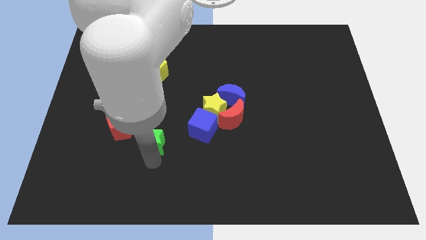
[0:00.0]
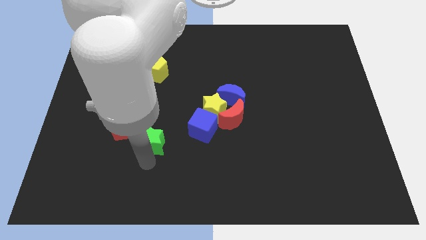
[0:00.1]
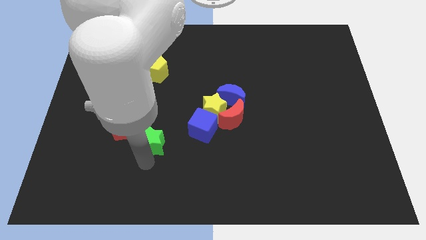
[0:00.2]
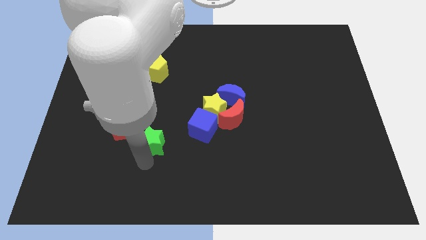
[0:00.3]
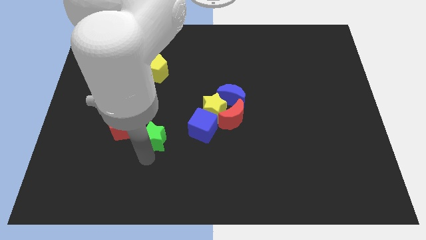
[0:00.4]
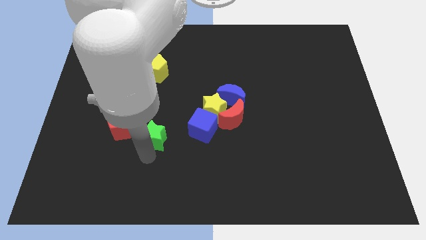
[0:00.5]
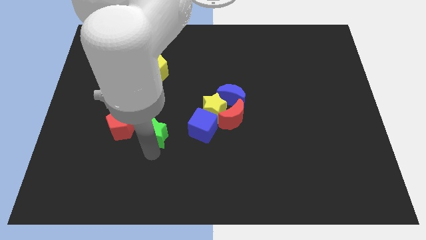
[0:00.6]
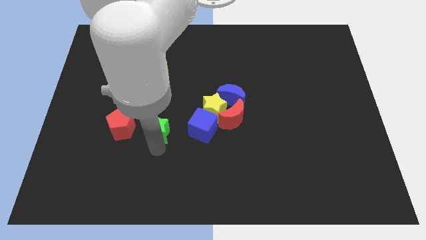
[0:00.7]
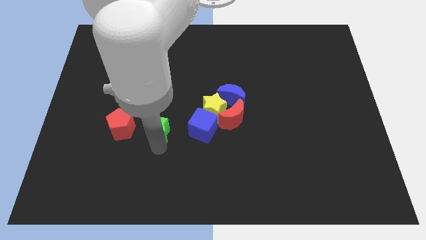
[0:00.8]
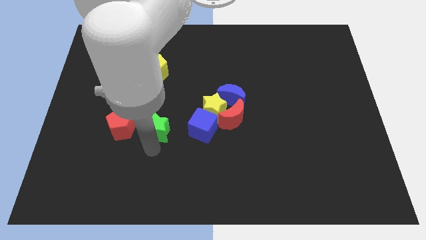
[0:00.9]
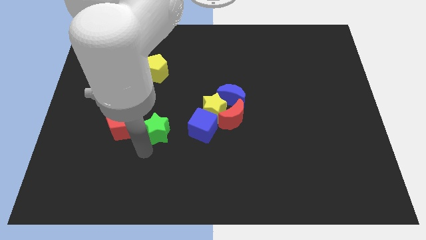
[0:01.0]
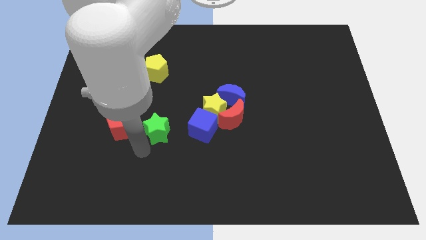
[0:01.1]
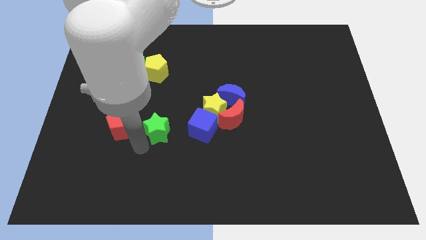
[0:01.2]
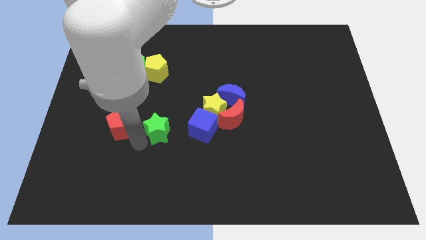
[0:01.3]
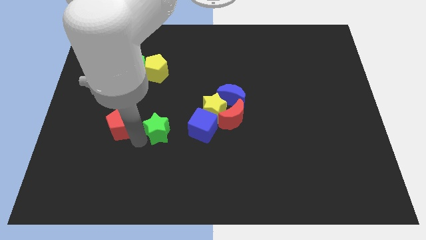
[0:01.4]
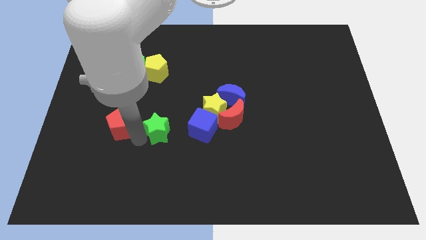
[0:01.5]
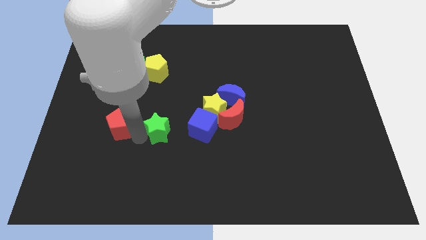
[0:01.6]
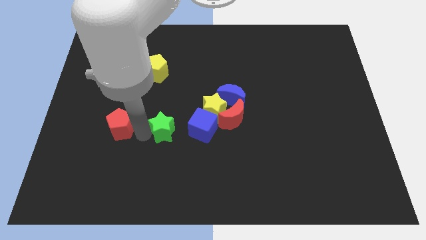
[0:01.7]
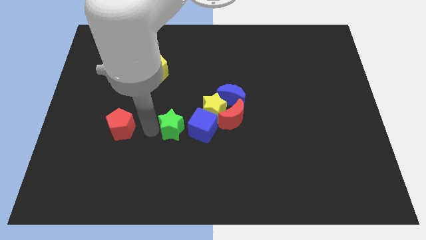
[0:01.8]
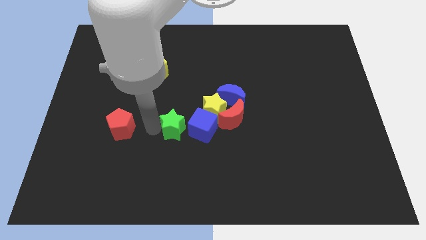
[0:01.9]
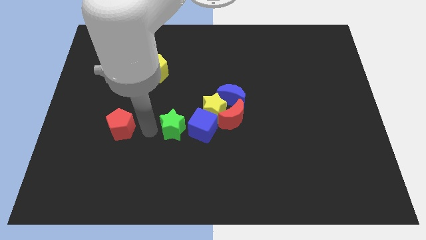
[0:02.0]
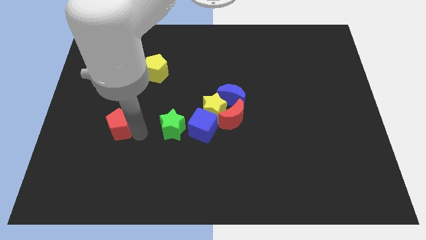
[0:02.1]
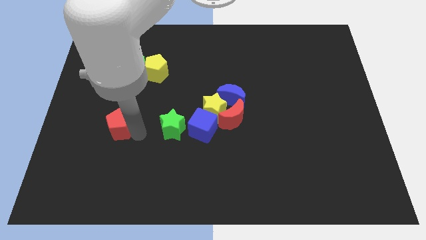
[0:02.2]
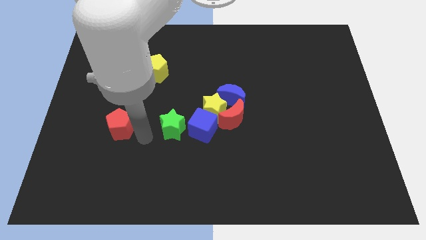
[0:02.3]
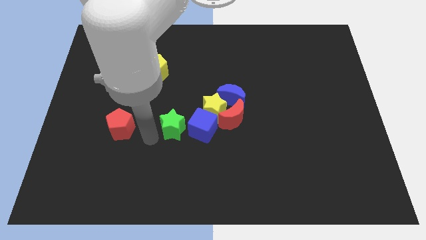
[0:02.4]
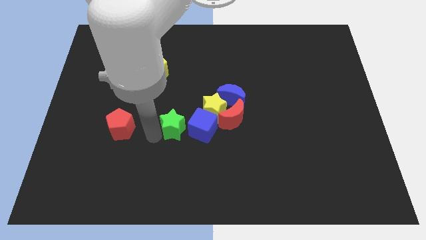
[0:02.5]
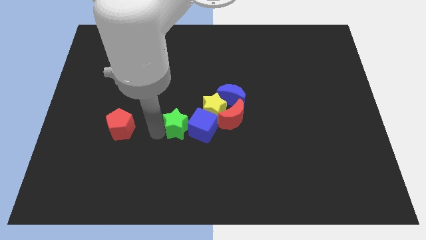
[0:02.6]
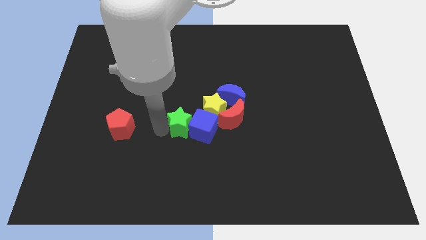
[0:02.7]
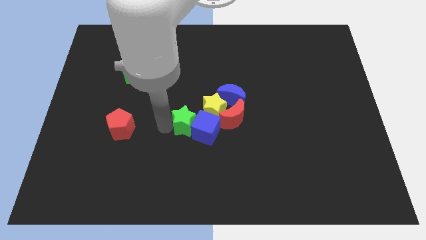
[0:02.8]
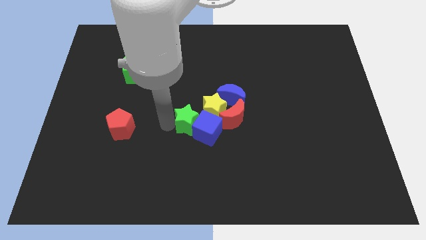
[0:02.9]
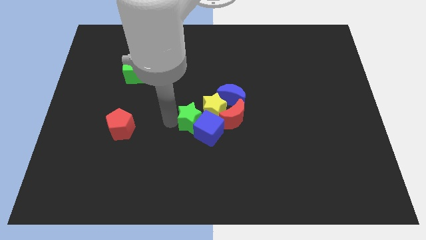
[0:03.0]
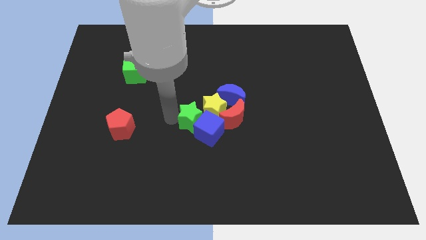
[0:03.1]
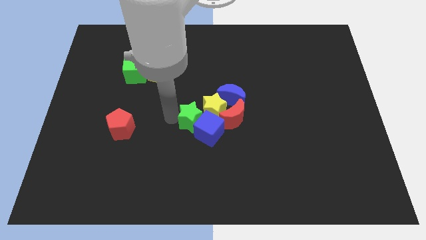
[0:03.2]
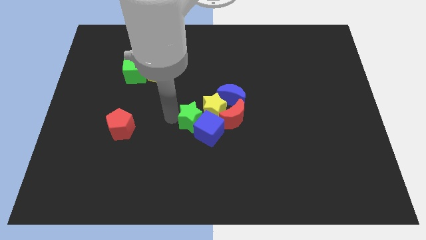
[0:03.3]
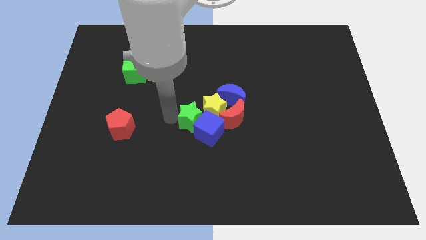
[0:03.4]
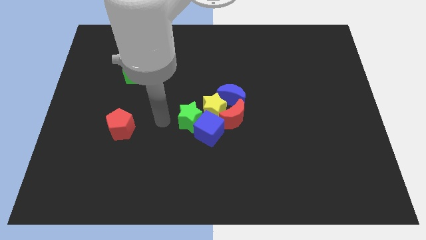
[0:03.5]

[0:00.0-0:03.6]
place the green star into the yellow star with group of blocks

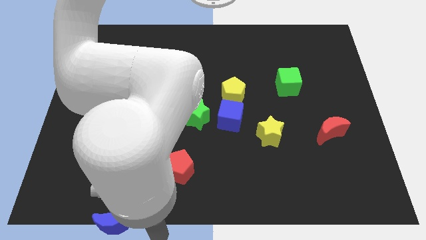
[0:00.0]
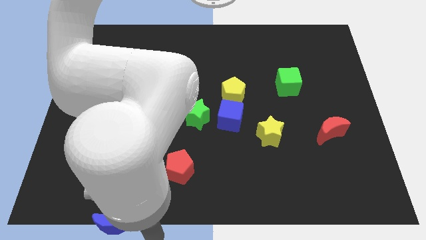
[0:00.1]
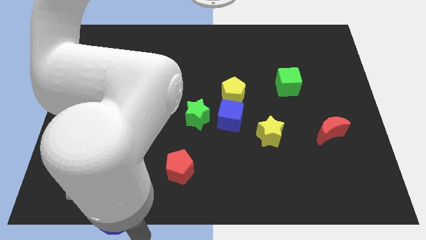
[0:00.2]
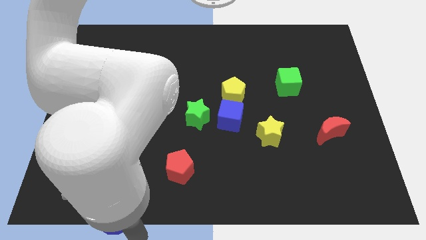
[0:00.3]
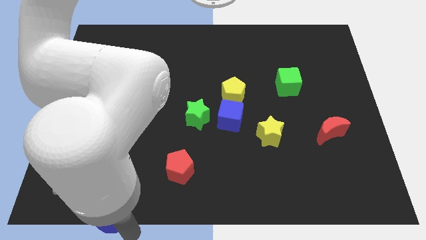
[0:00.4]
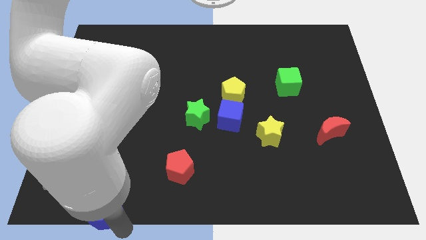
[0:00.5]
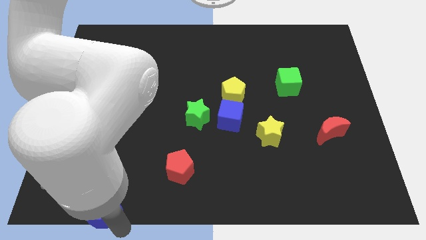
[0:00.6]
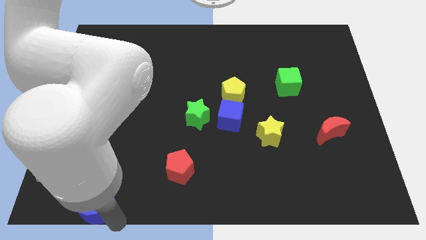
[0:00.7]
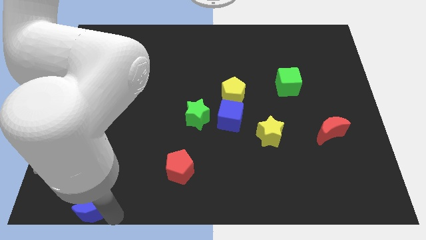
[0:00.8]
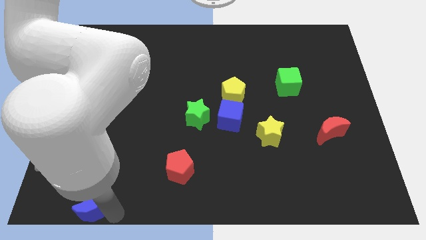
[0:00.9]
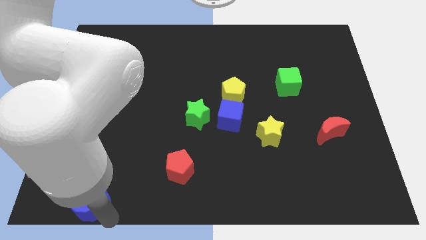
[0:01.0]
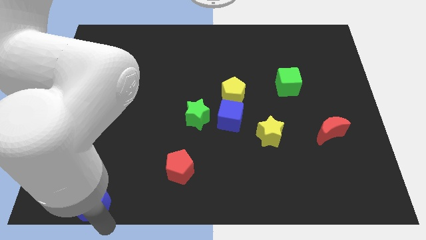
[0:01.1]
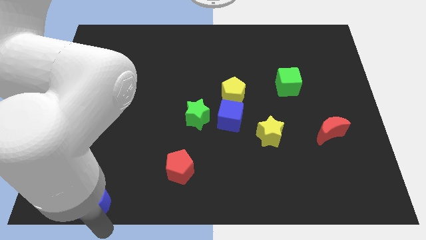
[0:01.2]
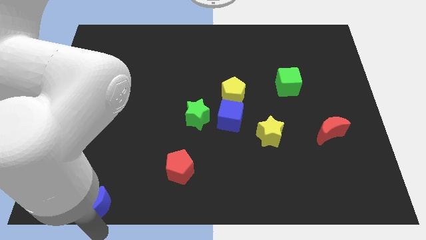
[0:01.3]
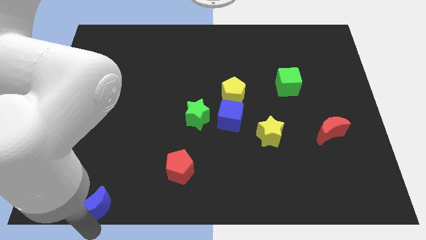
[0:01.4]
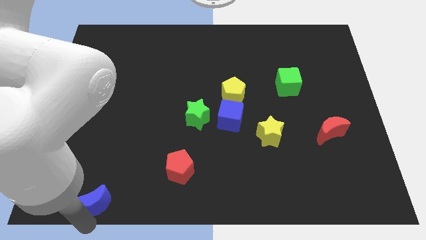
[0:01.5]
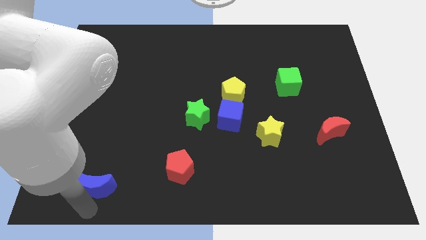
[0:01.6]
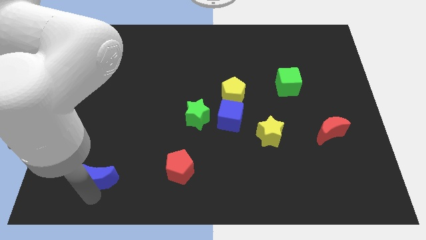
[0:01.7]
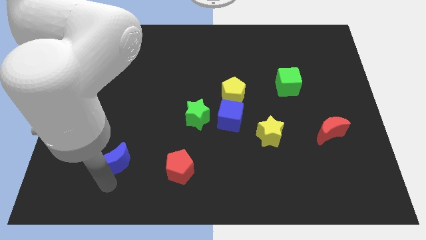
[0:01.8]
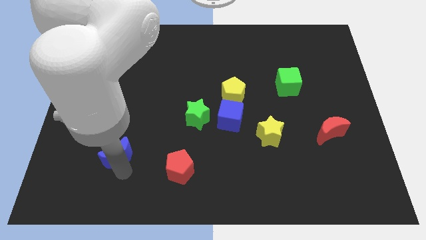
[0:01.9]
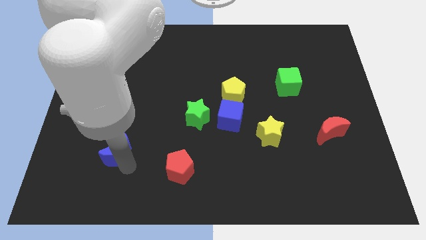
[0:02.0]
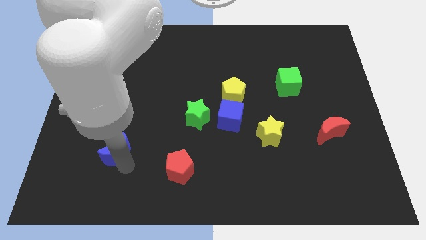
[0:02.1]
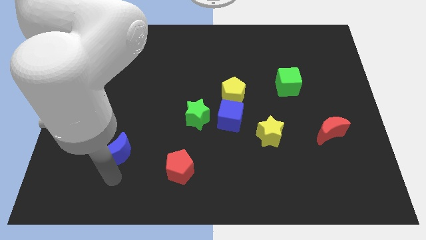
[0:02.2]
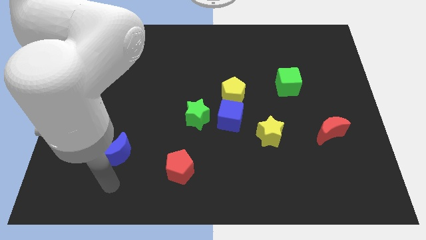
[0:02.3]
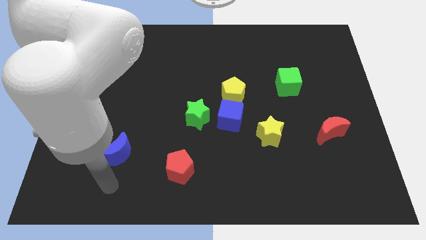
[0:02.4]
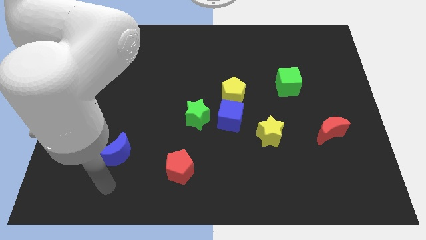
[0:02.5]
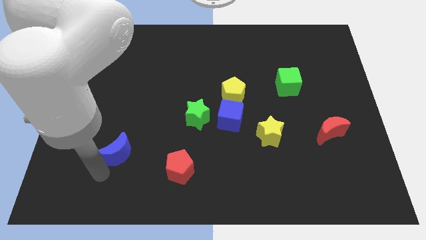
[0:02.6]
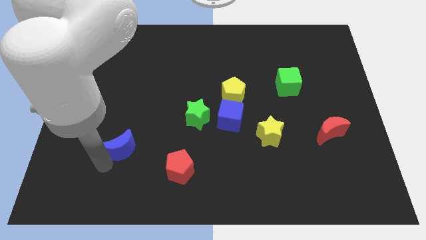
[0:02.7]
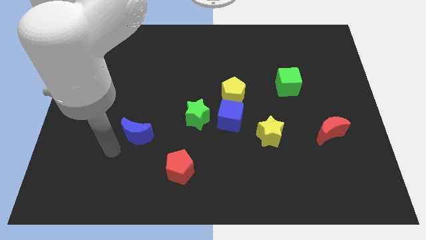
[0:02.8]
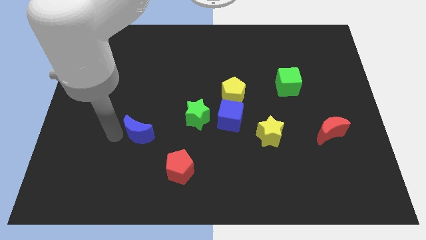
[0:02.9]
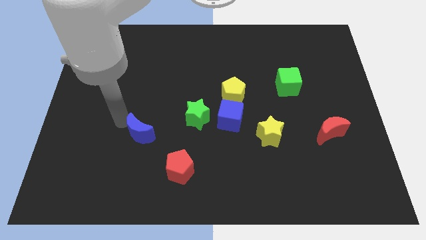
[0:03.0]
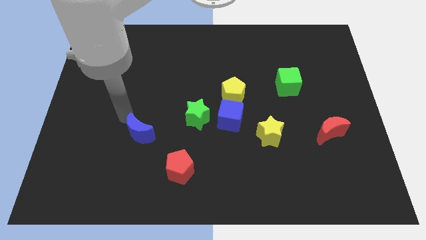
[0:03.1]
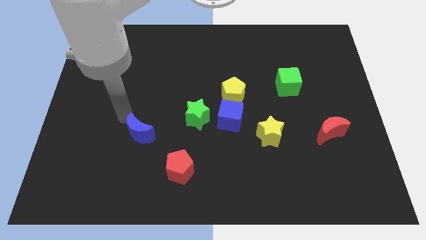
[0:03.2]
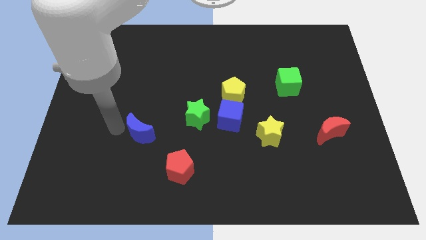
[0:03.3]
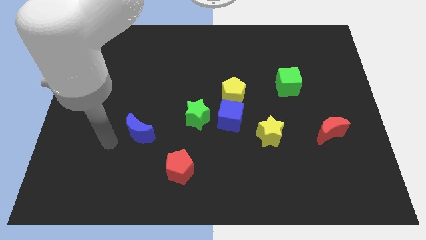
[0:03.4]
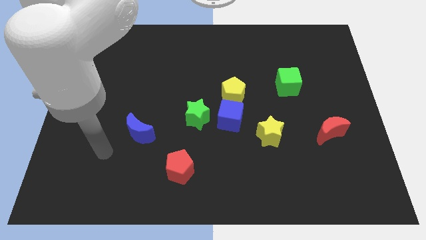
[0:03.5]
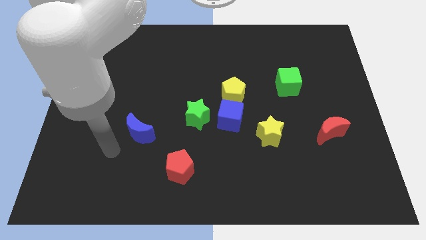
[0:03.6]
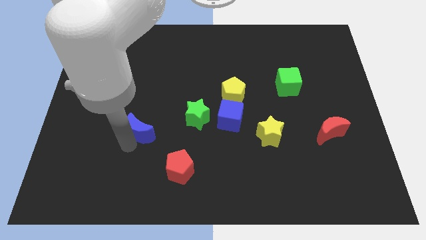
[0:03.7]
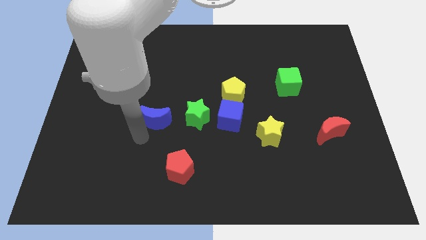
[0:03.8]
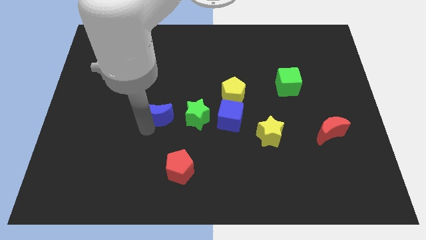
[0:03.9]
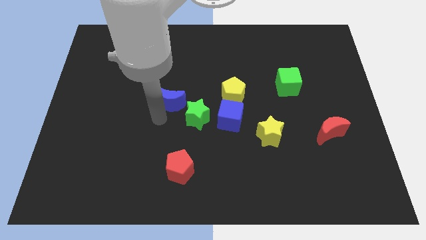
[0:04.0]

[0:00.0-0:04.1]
place blue moon left to green star

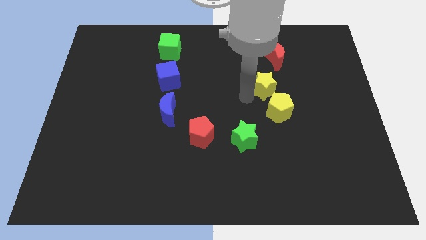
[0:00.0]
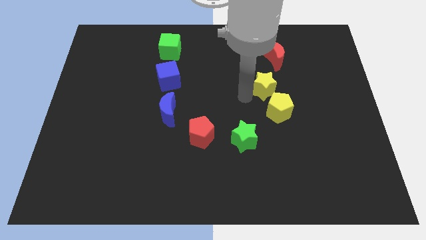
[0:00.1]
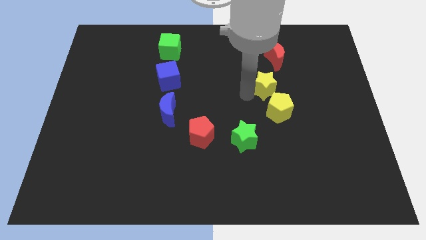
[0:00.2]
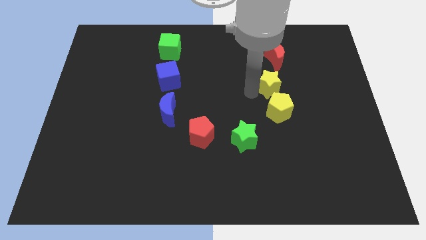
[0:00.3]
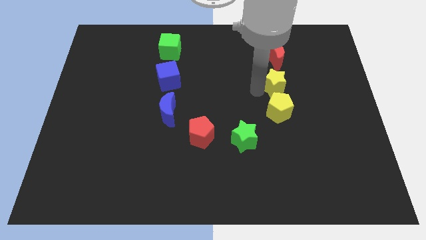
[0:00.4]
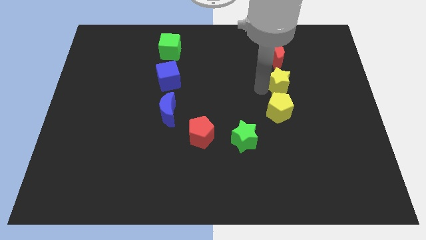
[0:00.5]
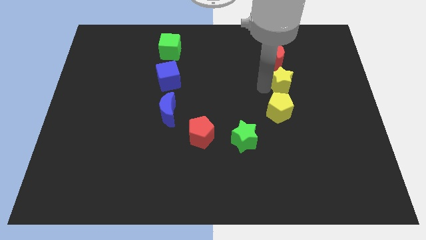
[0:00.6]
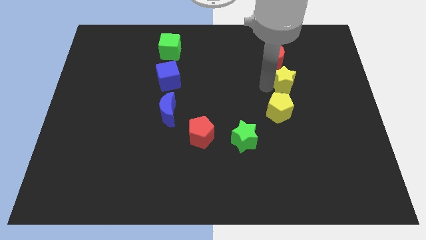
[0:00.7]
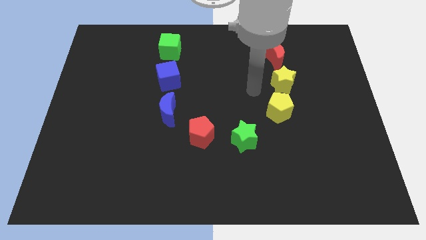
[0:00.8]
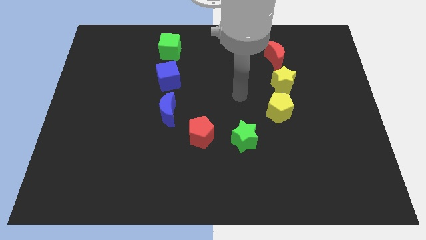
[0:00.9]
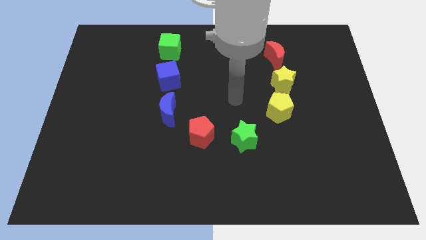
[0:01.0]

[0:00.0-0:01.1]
place the yellow star in between red crescent and yellow pentagon

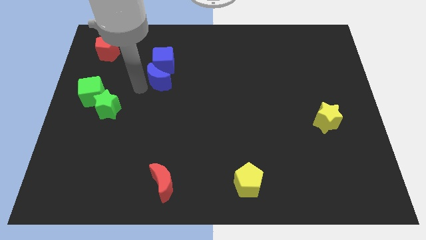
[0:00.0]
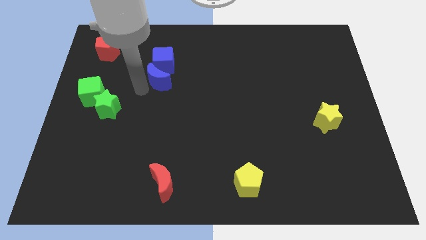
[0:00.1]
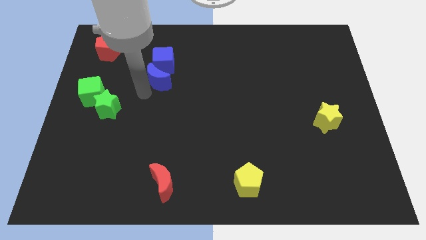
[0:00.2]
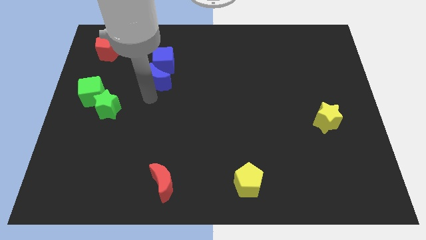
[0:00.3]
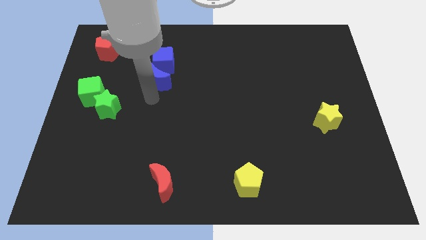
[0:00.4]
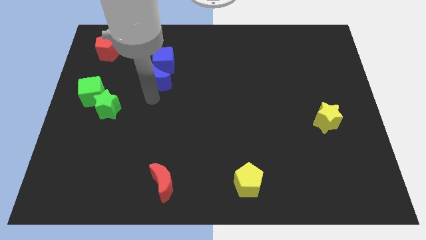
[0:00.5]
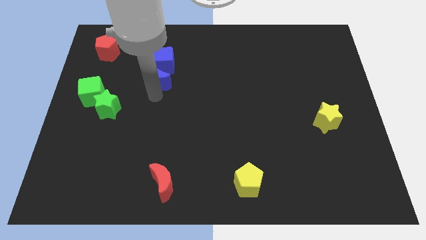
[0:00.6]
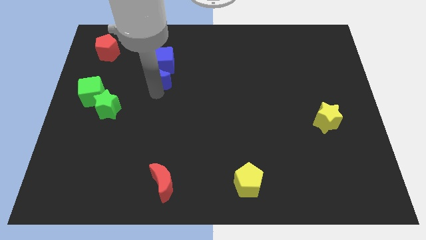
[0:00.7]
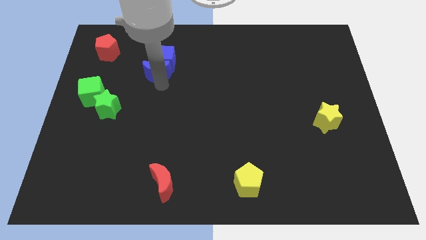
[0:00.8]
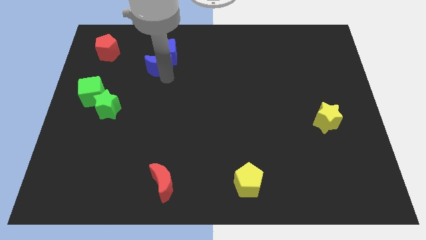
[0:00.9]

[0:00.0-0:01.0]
push the blue crescent into the blue cube
